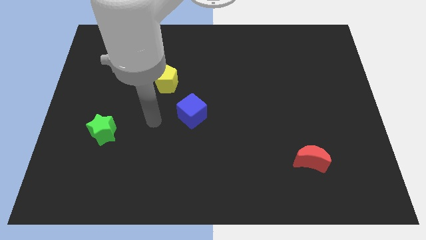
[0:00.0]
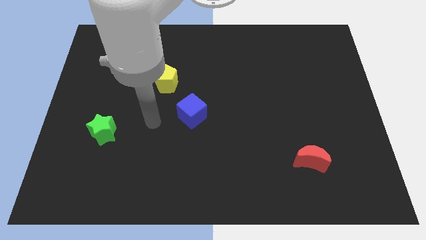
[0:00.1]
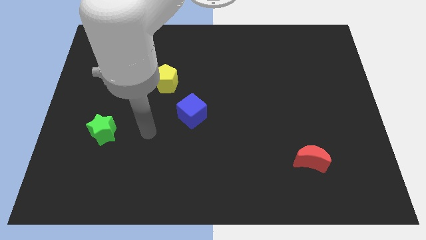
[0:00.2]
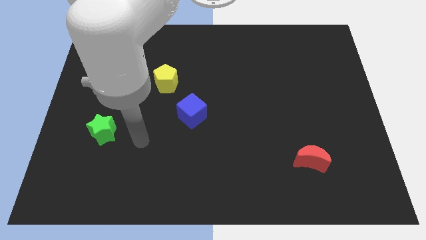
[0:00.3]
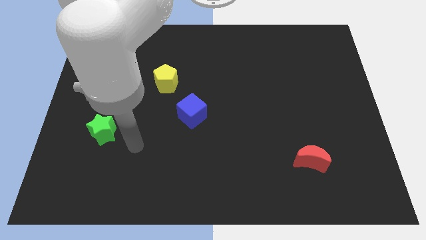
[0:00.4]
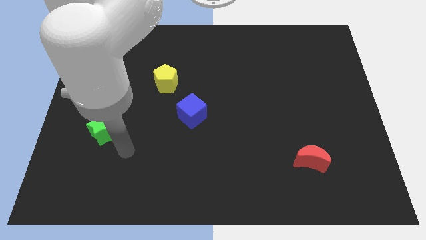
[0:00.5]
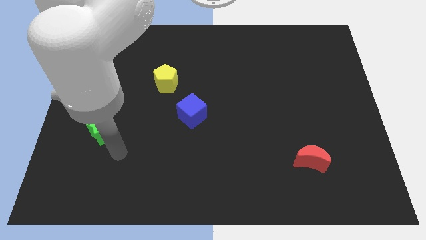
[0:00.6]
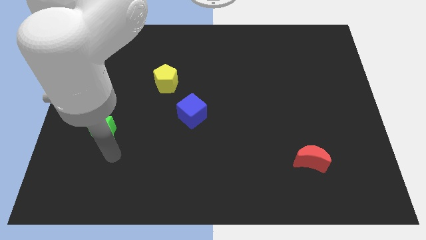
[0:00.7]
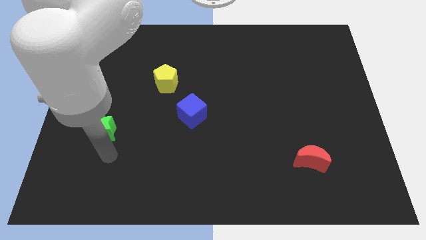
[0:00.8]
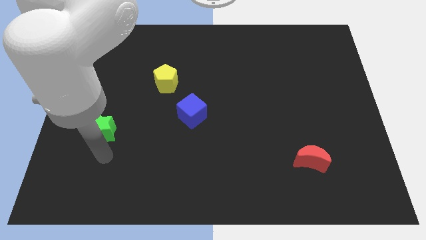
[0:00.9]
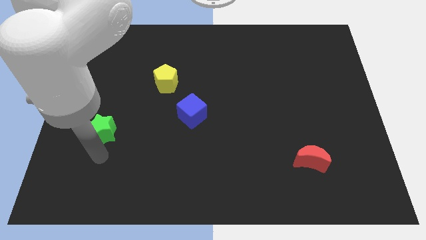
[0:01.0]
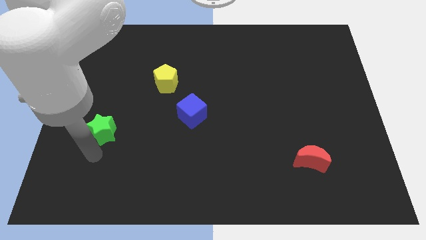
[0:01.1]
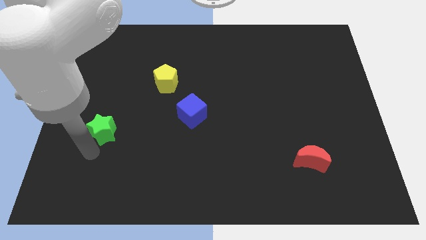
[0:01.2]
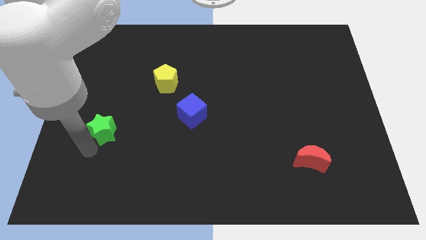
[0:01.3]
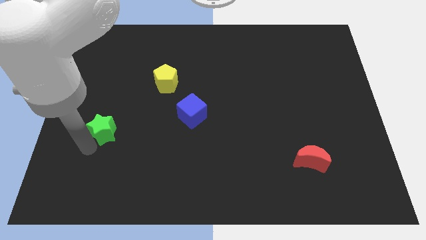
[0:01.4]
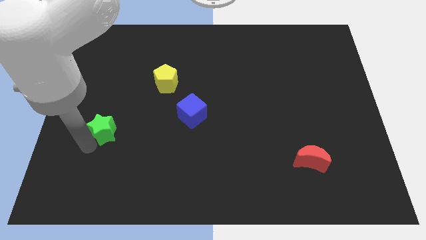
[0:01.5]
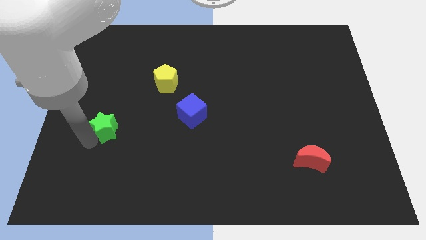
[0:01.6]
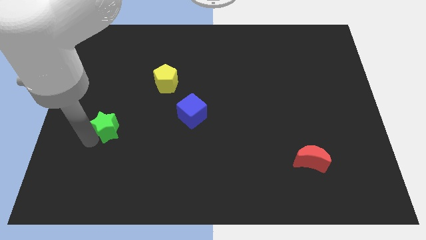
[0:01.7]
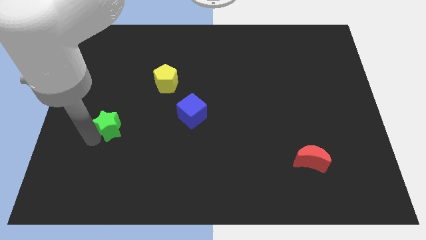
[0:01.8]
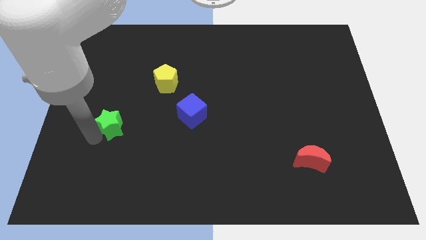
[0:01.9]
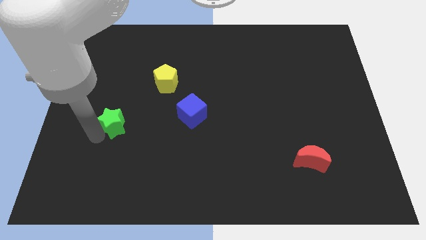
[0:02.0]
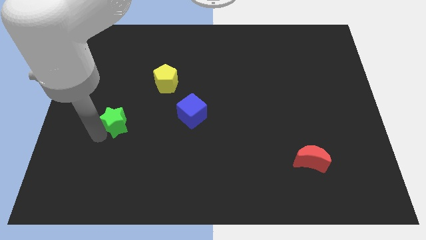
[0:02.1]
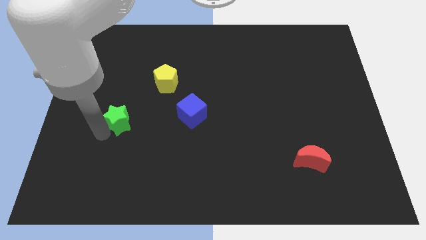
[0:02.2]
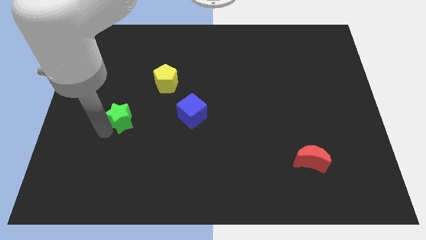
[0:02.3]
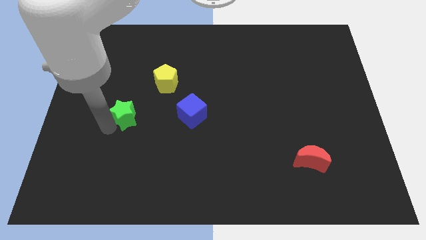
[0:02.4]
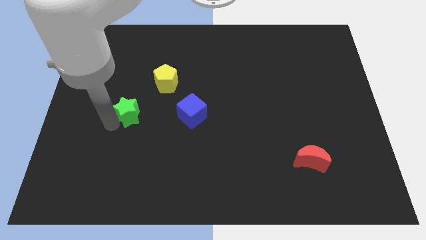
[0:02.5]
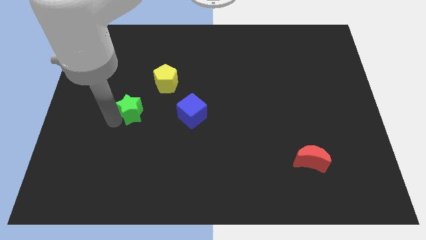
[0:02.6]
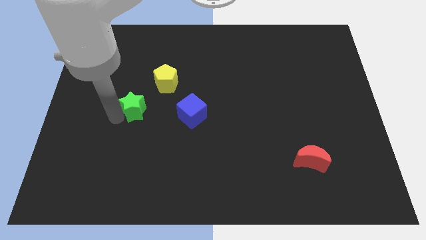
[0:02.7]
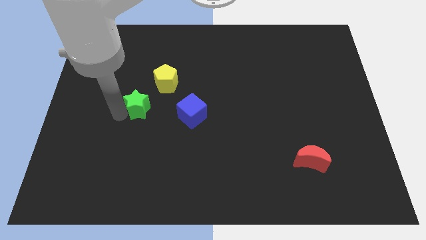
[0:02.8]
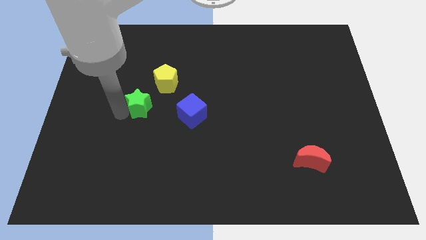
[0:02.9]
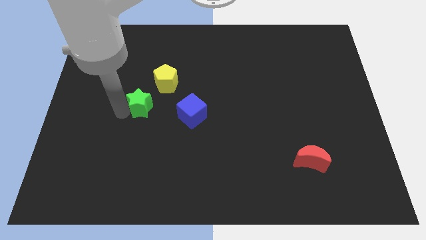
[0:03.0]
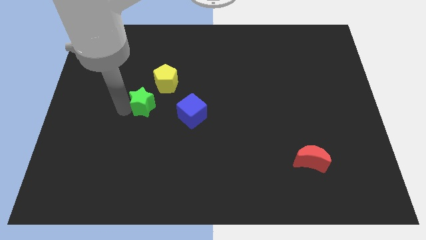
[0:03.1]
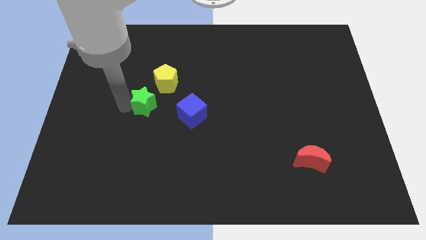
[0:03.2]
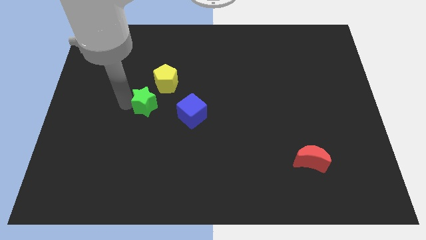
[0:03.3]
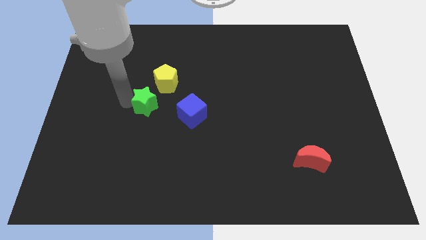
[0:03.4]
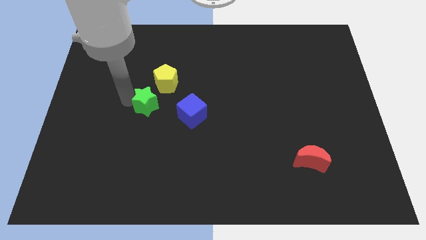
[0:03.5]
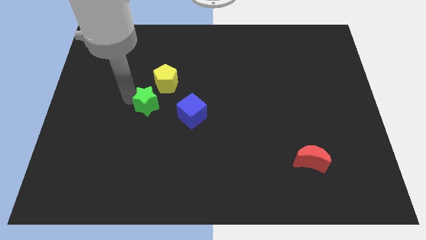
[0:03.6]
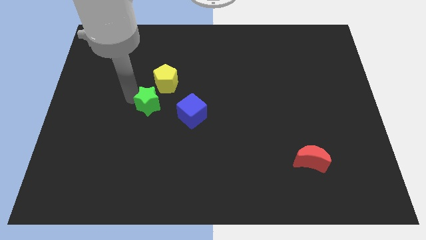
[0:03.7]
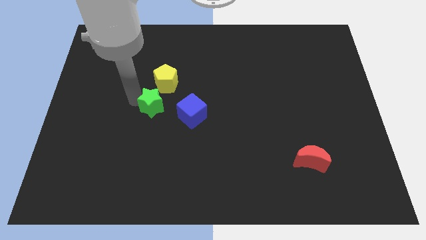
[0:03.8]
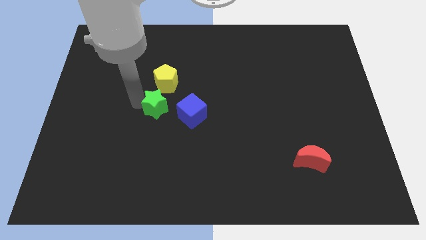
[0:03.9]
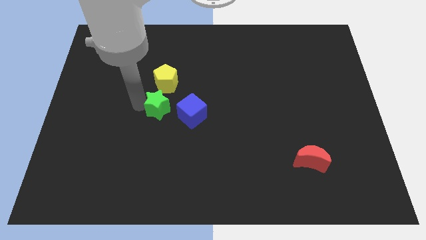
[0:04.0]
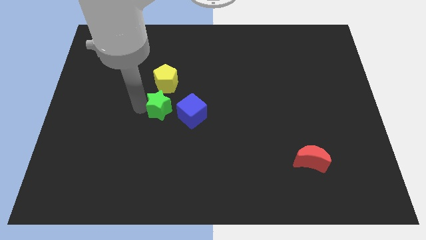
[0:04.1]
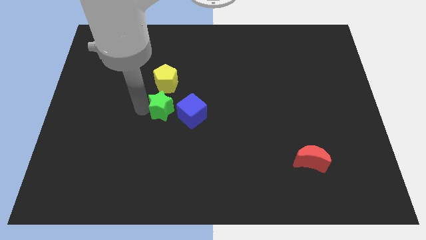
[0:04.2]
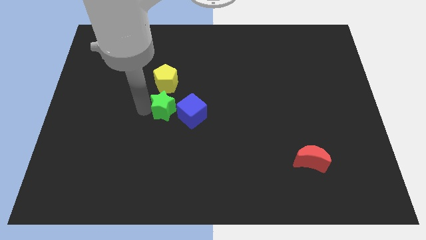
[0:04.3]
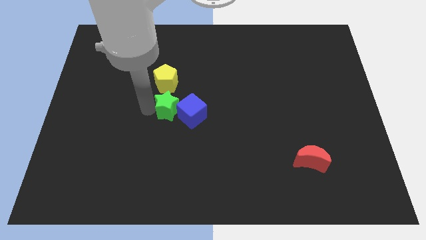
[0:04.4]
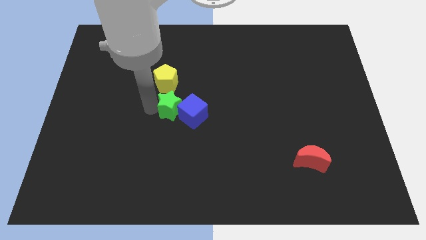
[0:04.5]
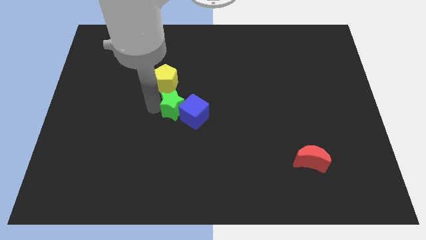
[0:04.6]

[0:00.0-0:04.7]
push the green star towards the blue block

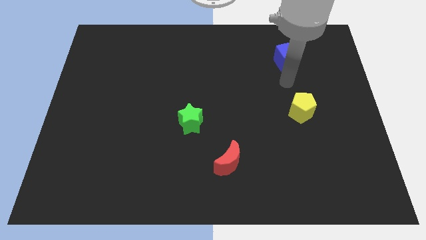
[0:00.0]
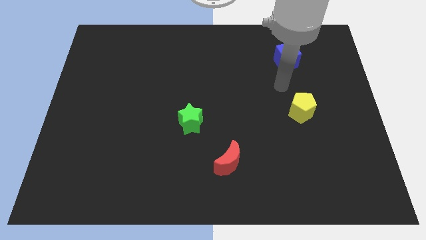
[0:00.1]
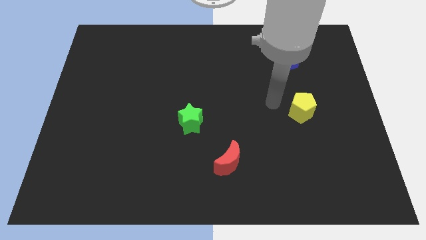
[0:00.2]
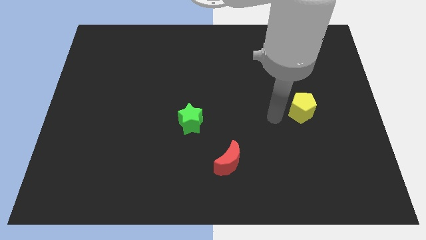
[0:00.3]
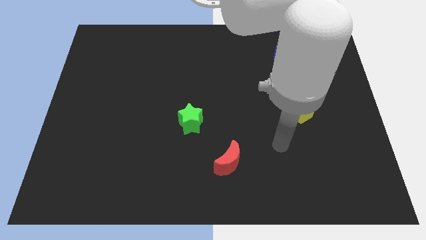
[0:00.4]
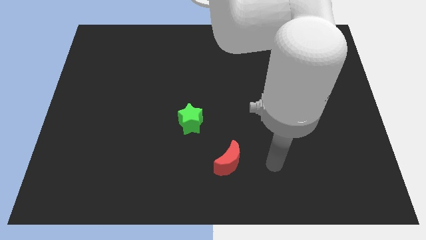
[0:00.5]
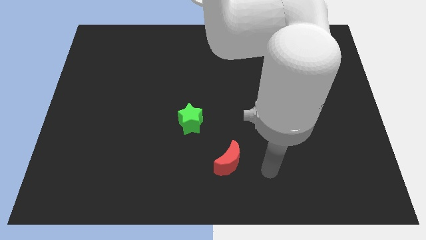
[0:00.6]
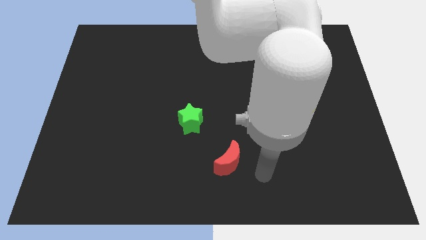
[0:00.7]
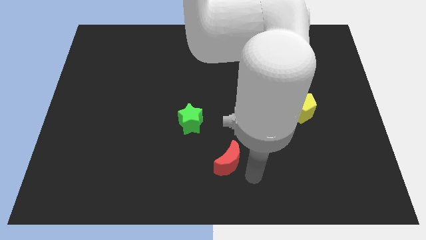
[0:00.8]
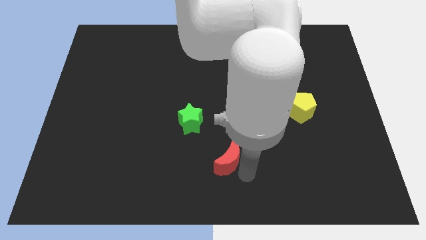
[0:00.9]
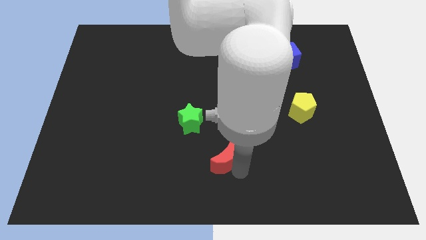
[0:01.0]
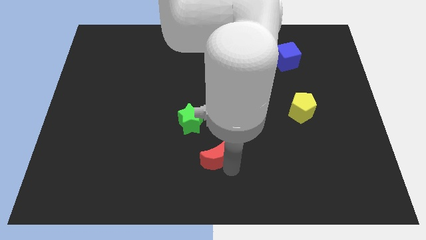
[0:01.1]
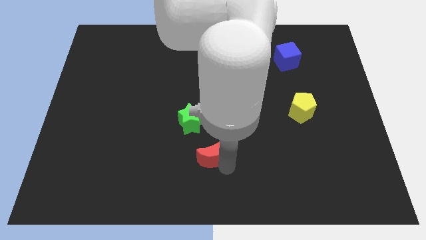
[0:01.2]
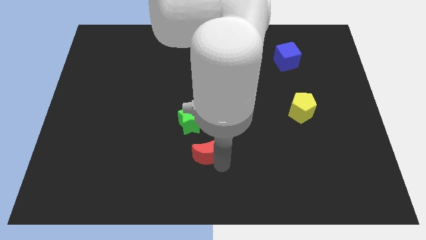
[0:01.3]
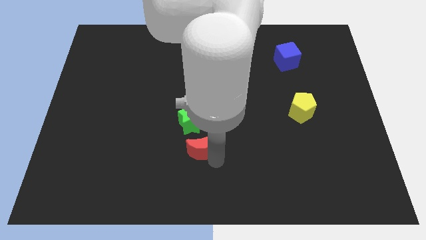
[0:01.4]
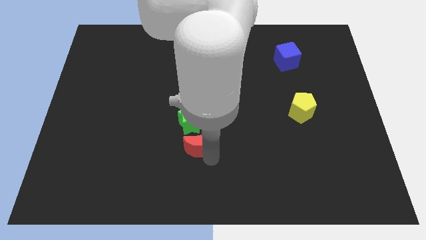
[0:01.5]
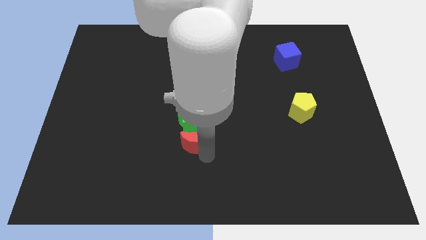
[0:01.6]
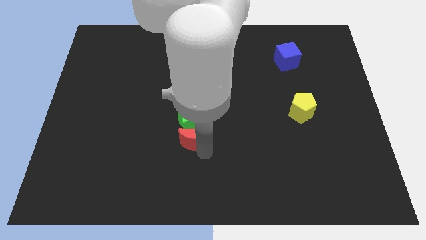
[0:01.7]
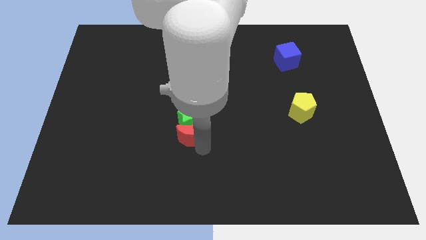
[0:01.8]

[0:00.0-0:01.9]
move the moon close to the green block

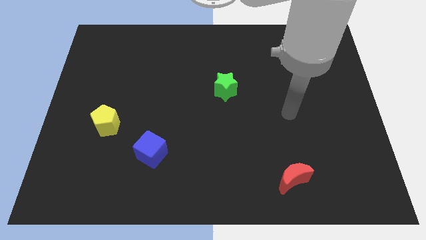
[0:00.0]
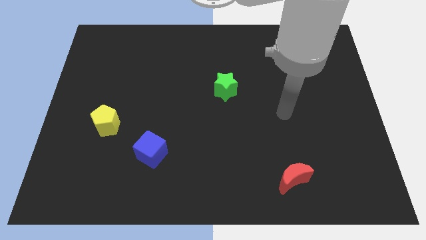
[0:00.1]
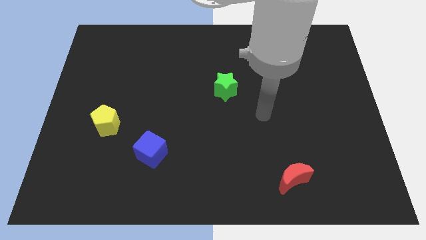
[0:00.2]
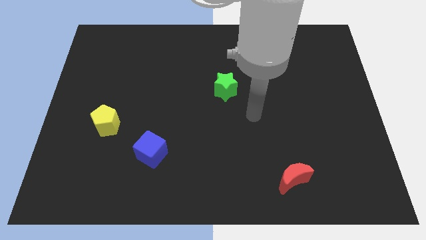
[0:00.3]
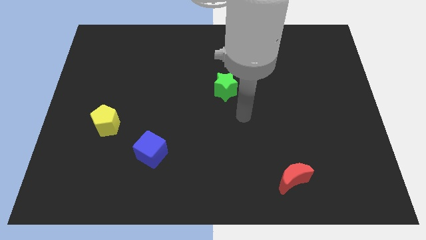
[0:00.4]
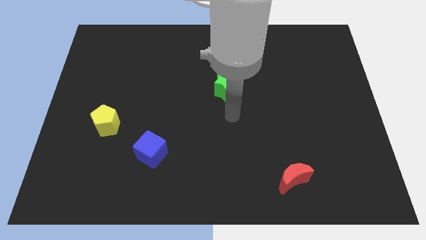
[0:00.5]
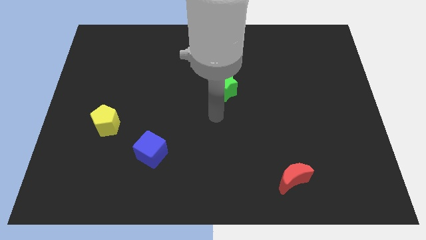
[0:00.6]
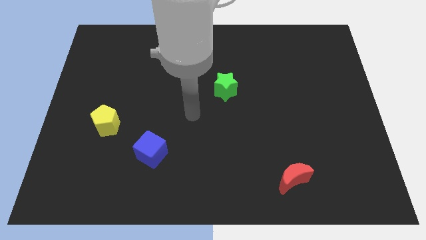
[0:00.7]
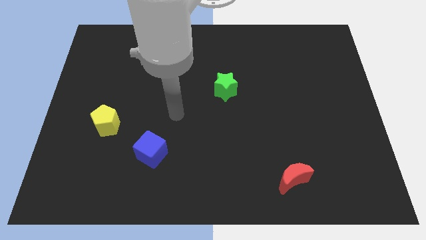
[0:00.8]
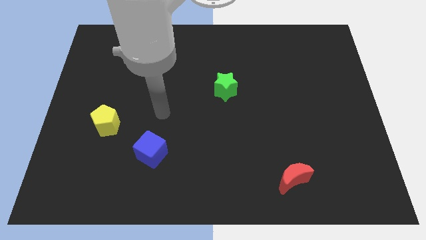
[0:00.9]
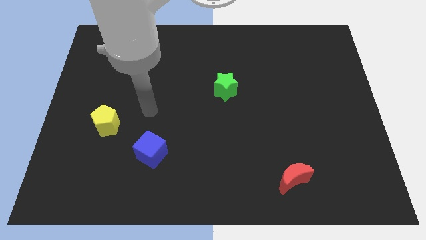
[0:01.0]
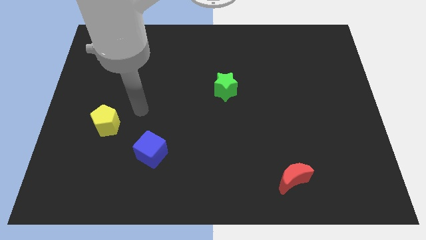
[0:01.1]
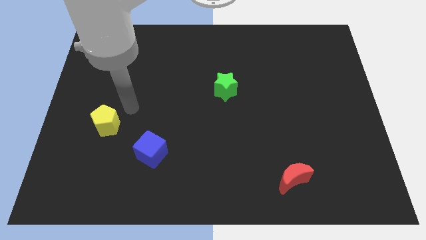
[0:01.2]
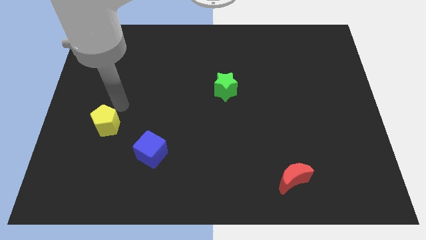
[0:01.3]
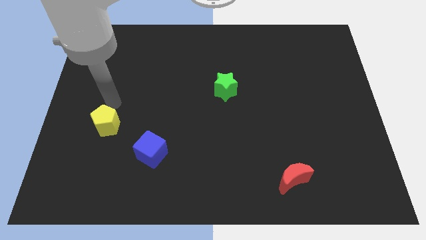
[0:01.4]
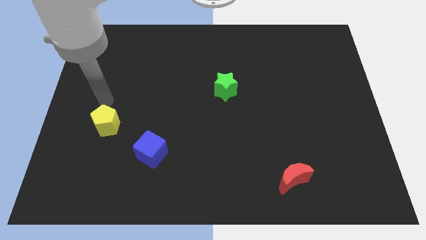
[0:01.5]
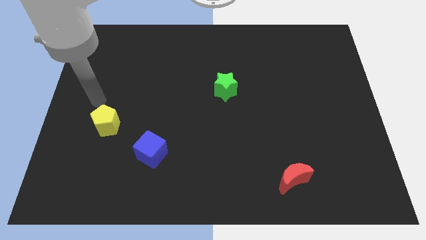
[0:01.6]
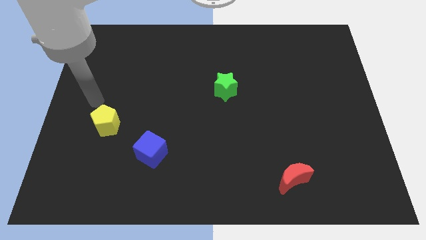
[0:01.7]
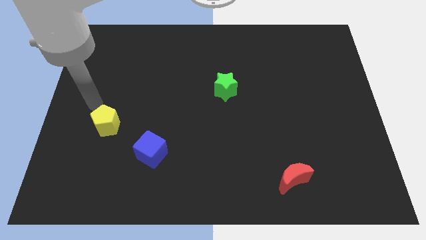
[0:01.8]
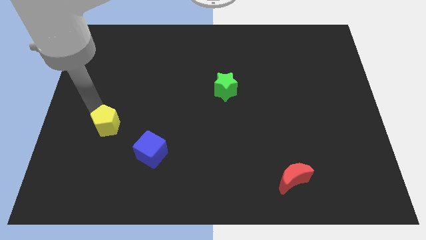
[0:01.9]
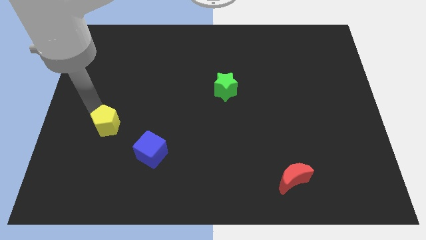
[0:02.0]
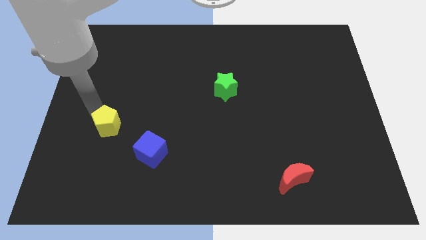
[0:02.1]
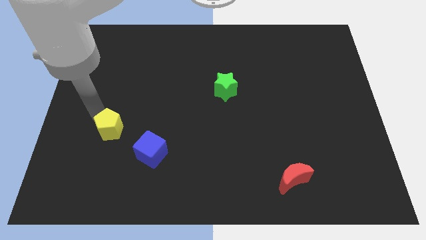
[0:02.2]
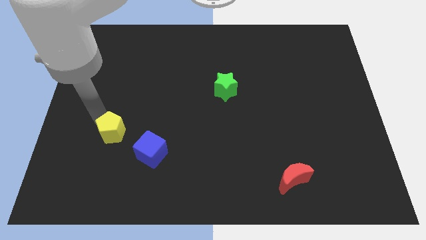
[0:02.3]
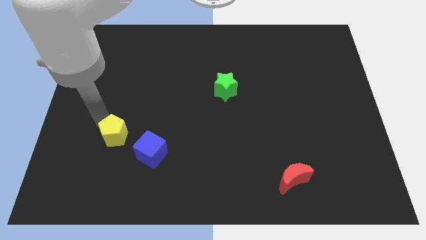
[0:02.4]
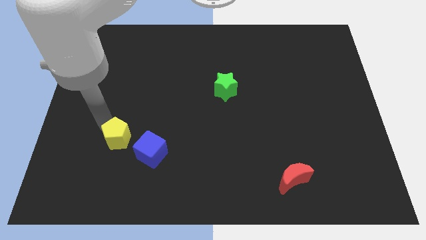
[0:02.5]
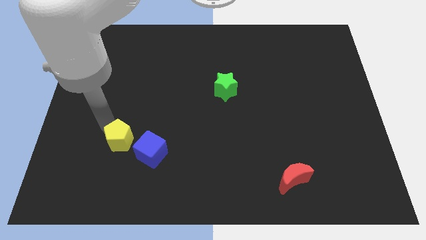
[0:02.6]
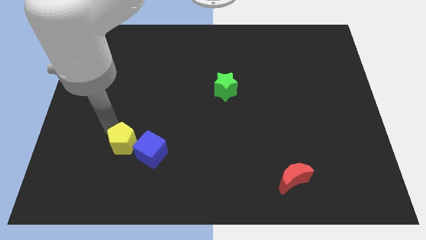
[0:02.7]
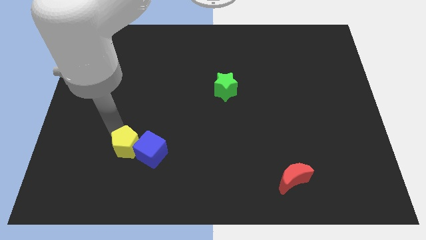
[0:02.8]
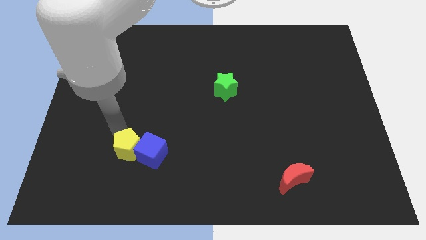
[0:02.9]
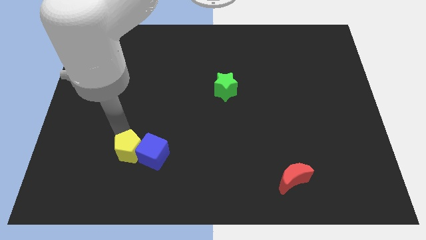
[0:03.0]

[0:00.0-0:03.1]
slide the yellow pentagon to the blue block
